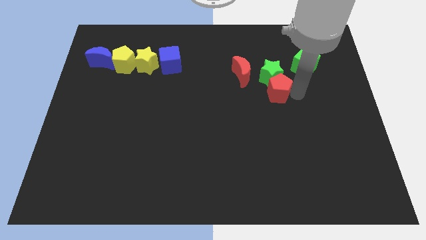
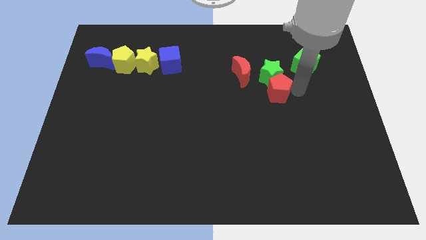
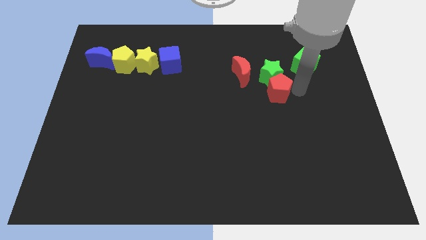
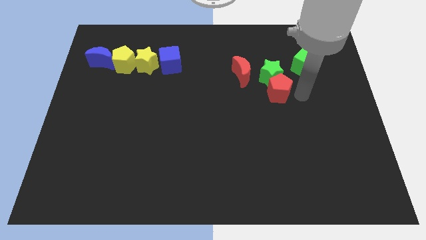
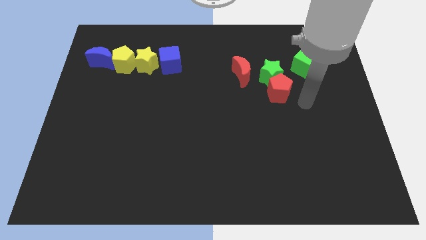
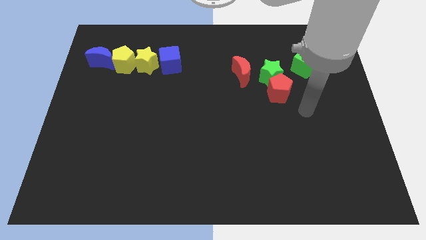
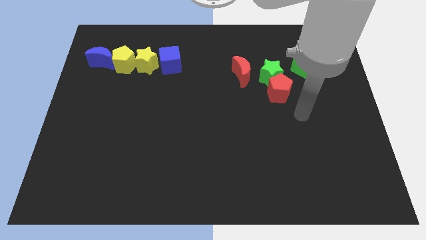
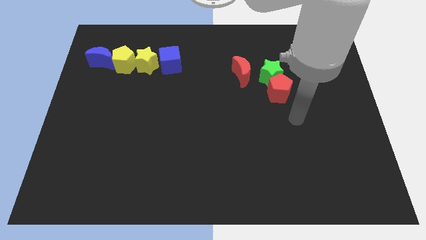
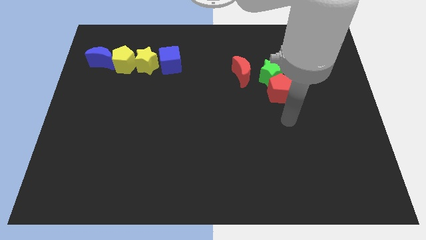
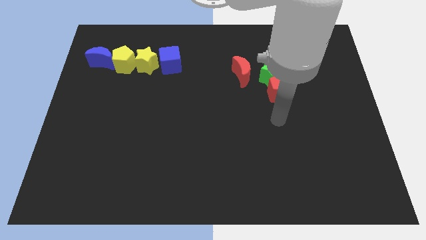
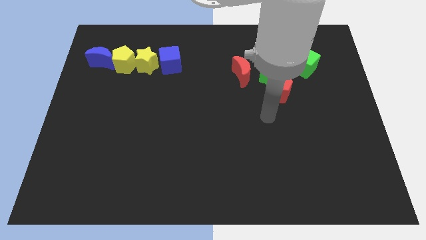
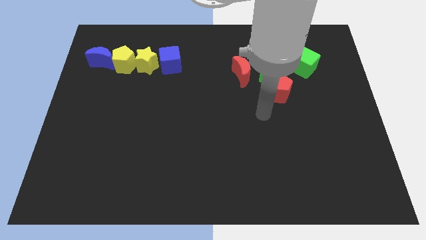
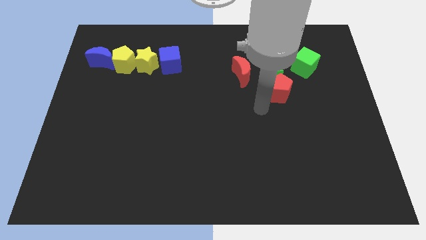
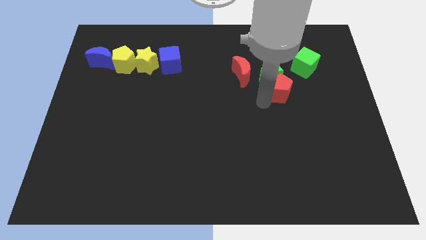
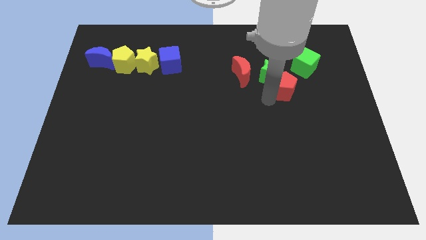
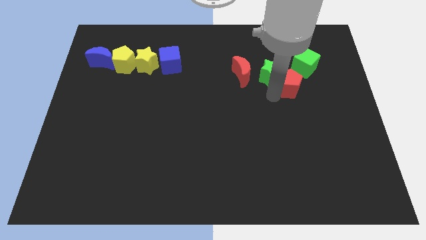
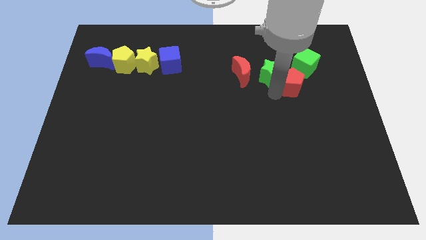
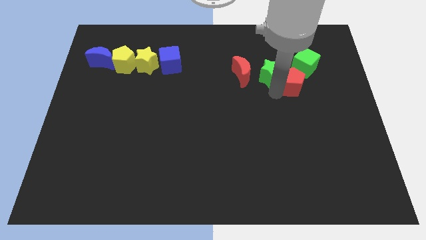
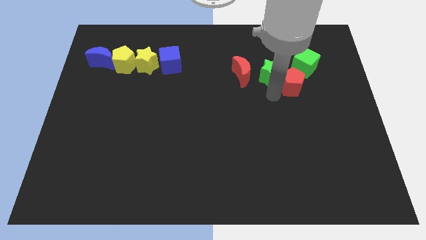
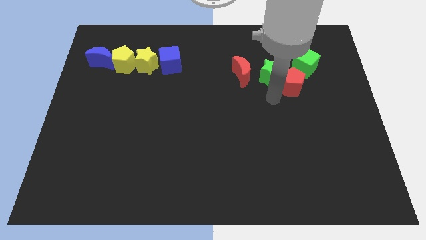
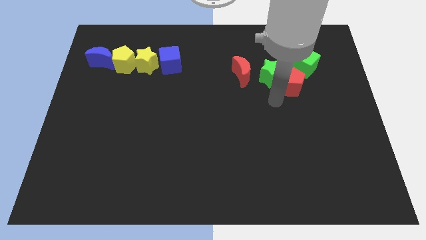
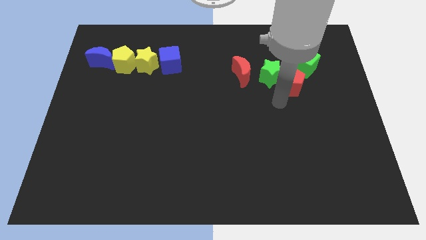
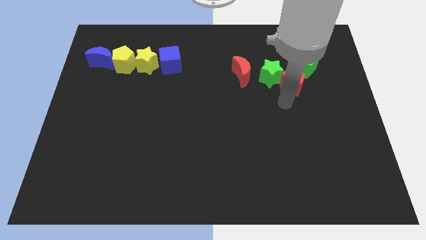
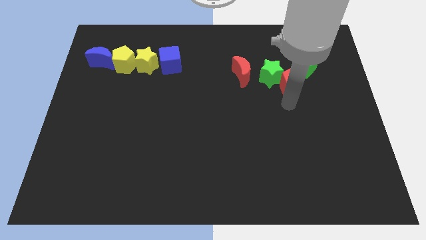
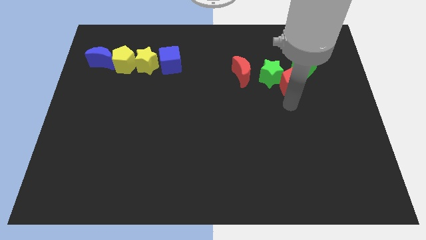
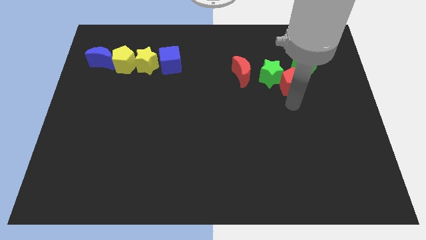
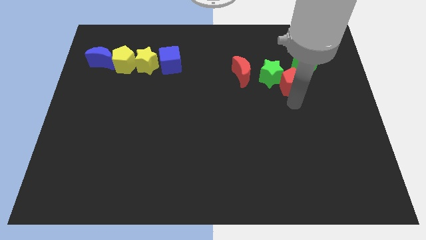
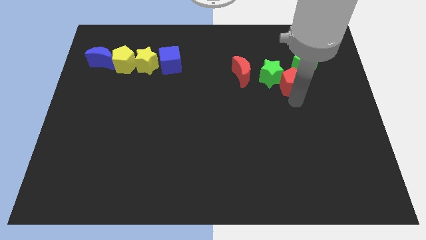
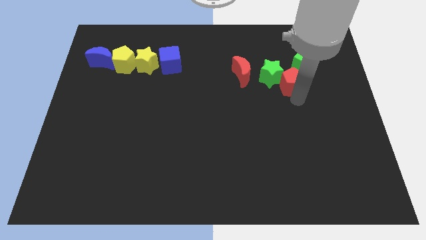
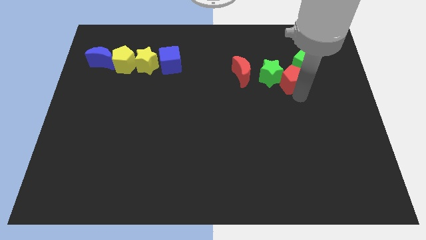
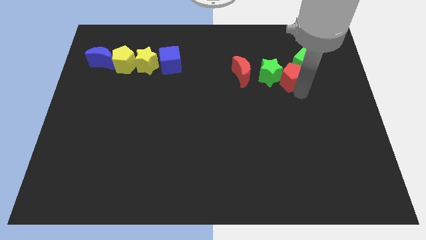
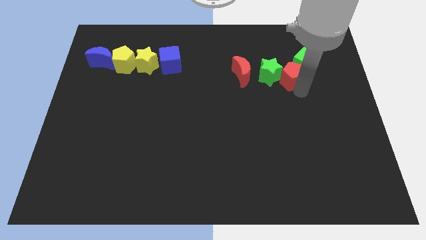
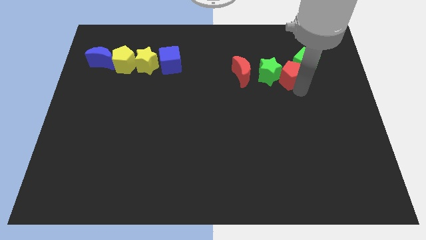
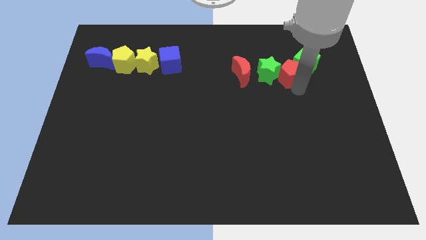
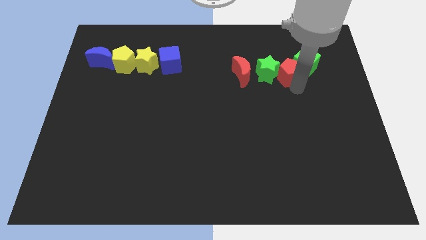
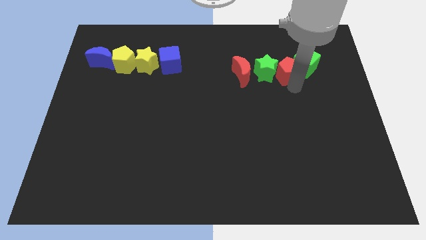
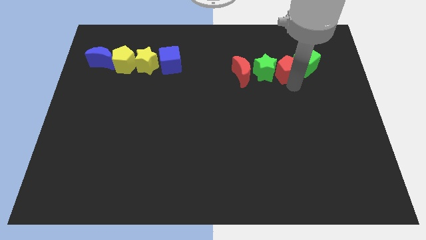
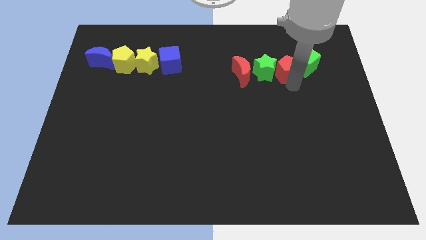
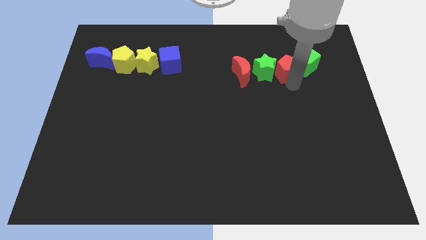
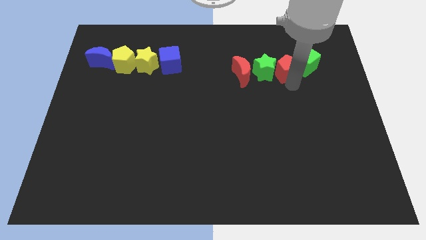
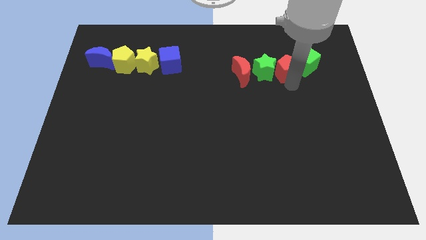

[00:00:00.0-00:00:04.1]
place the red pentagon and green star between red moon and green cube

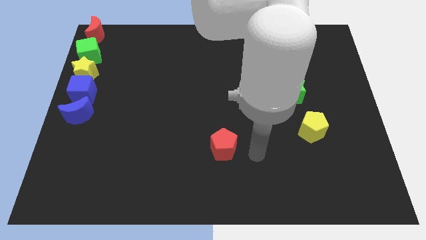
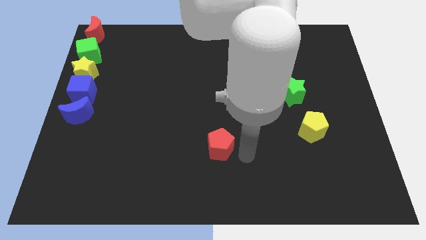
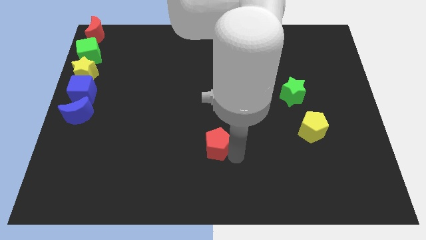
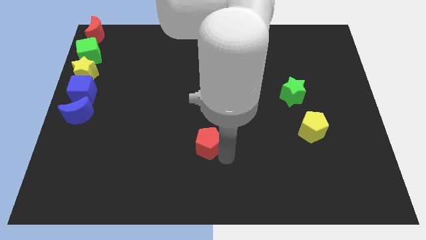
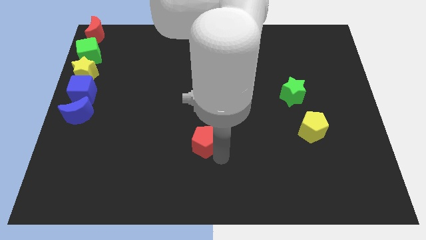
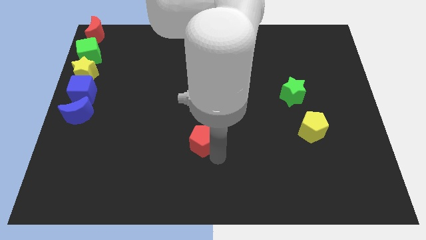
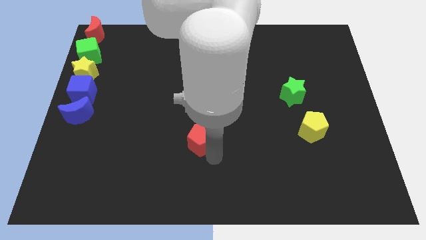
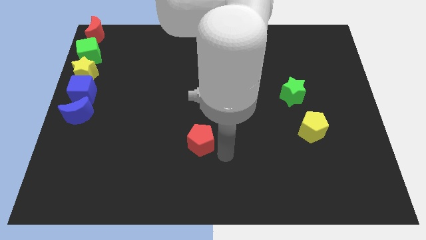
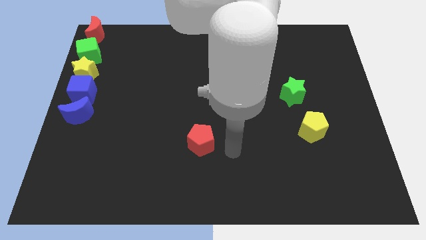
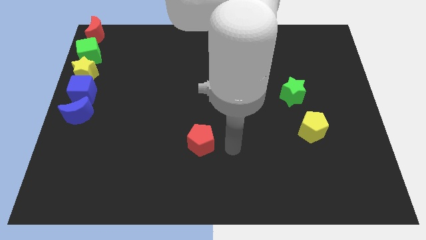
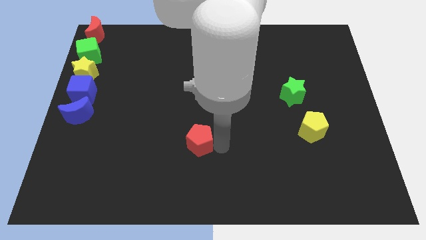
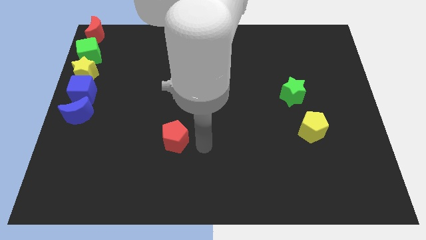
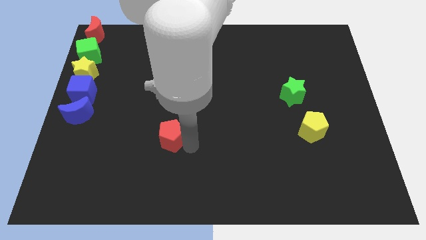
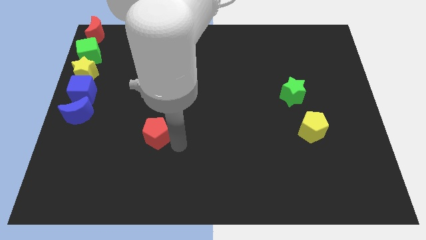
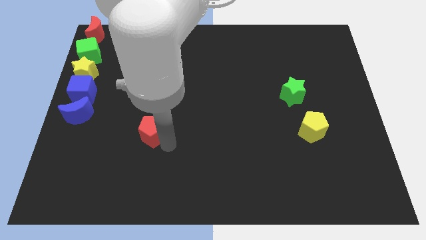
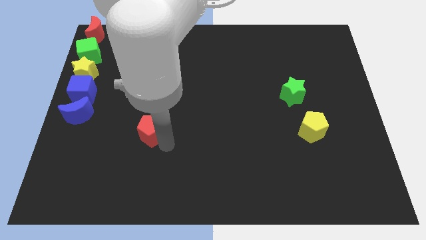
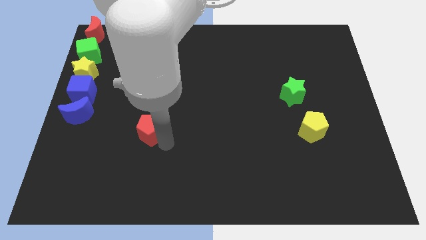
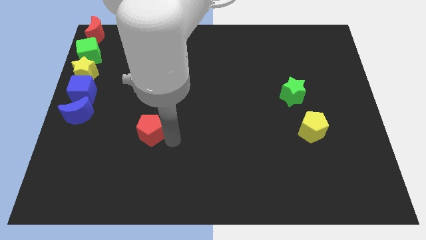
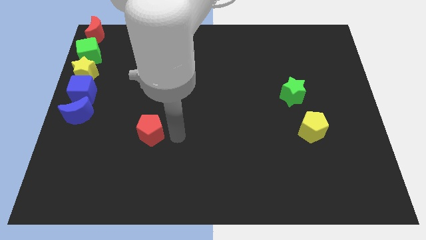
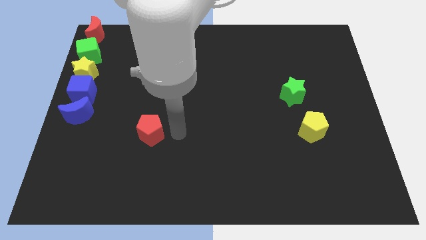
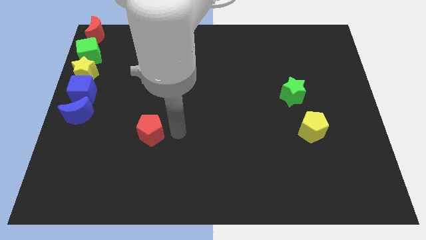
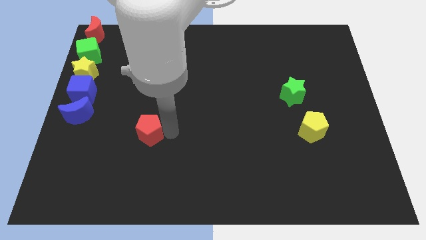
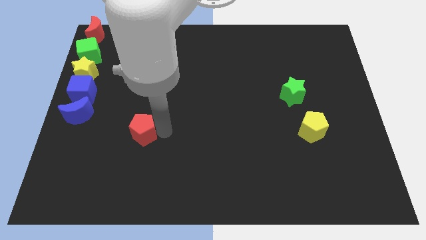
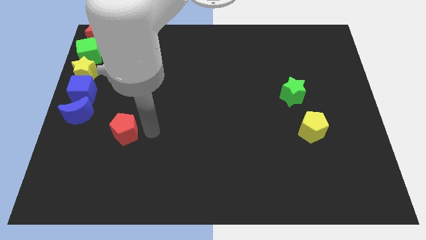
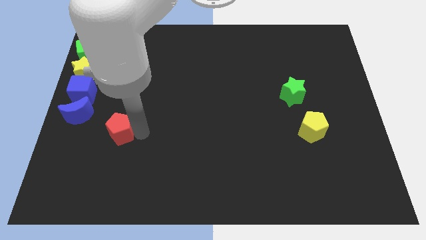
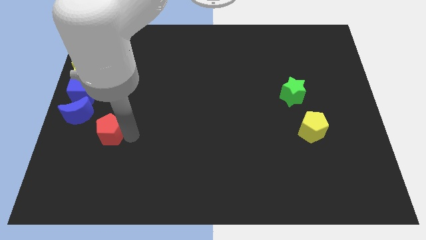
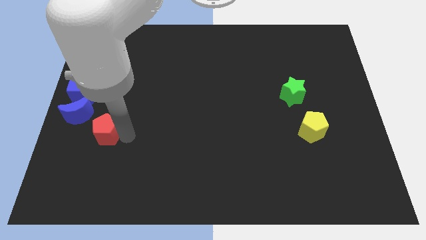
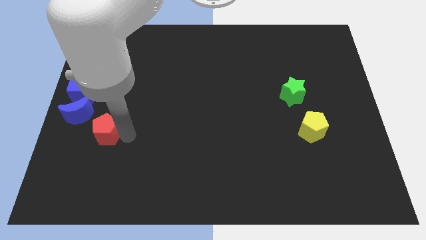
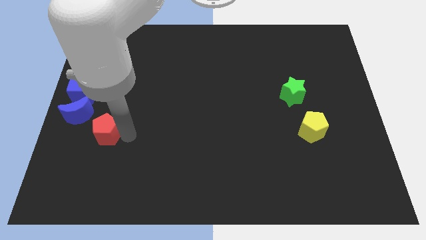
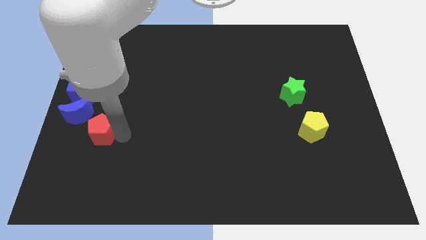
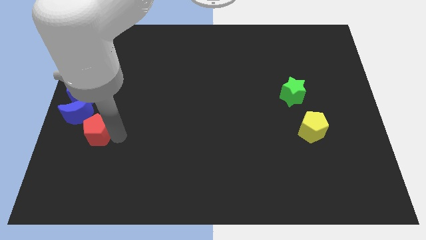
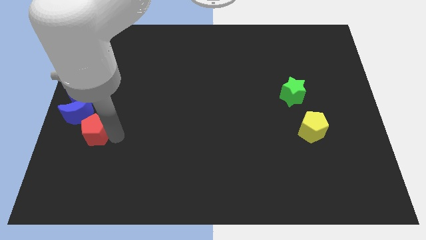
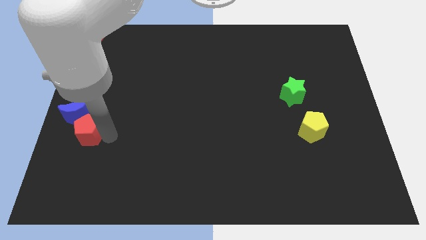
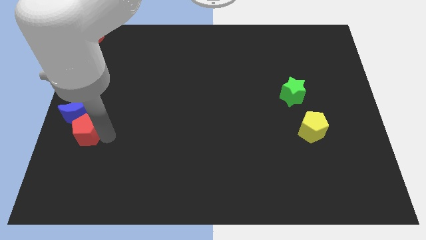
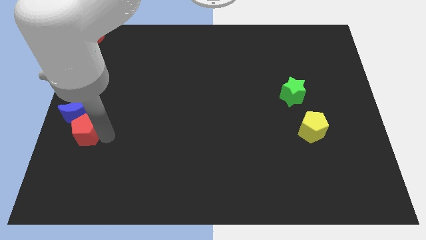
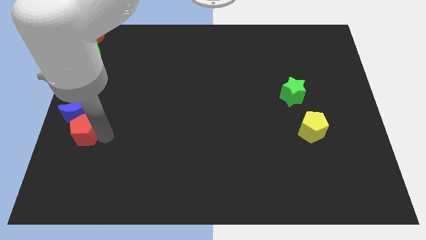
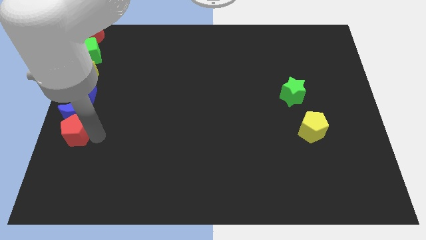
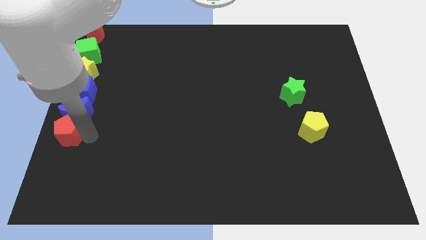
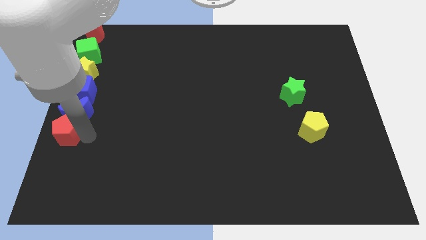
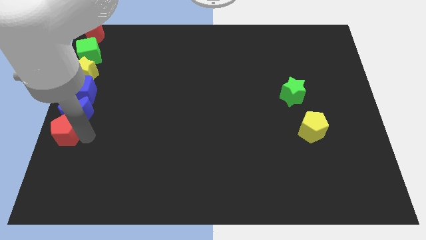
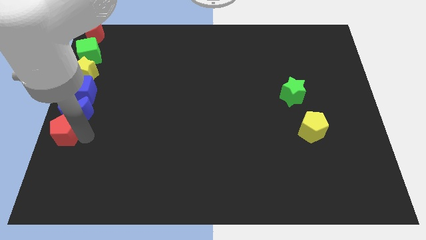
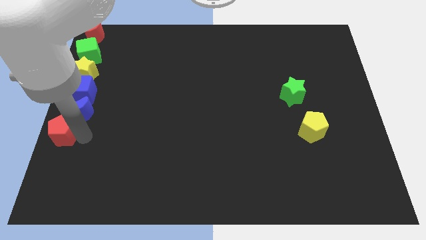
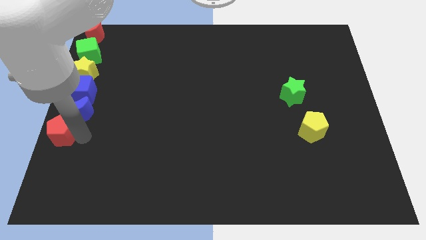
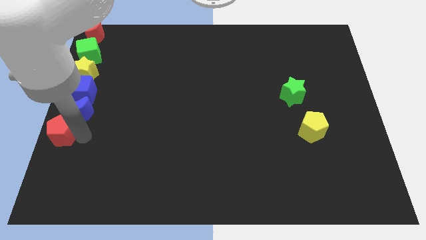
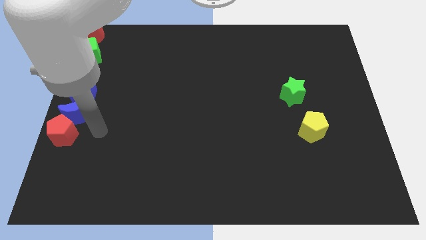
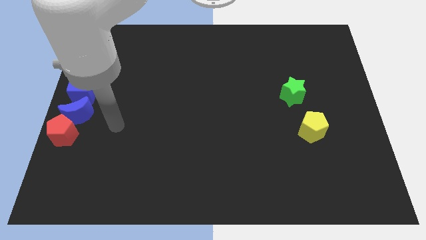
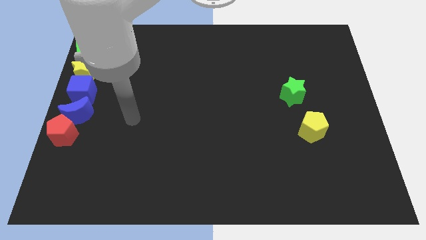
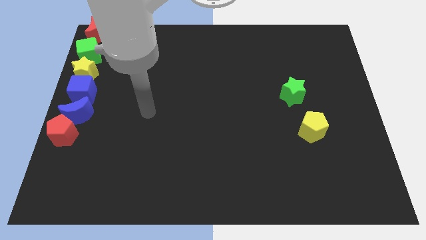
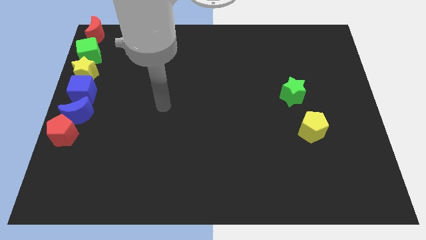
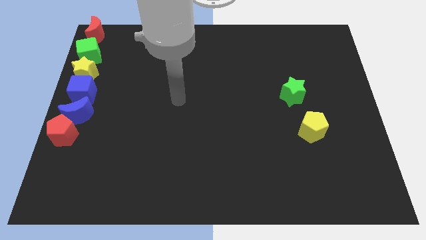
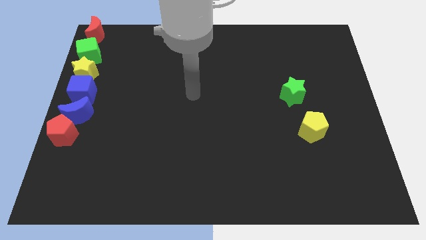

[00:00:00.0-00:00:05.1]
put the red pentagon below the blue moon
